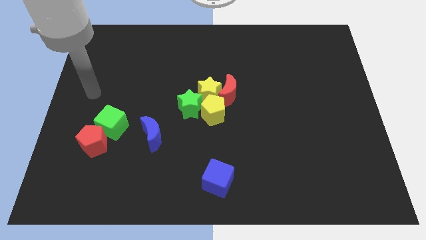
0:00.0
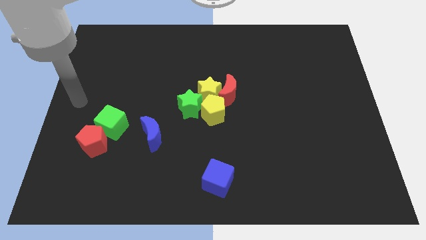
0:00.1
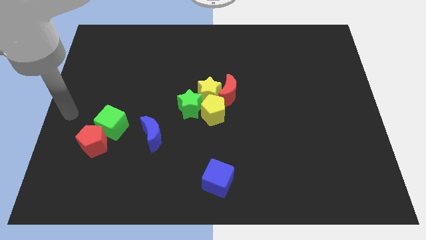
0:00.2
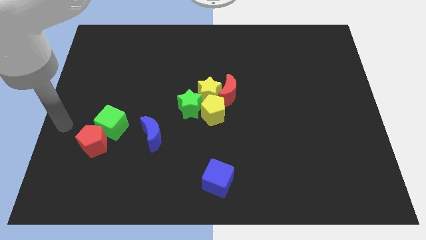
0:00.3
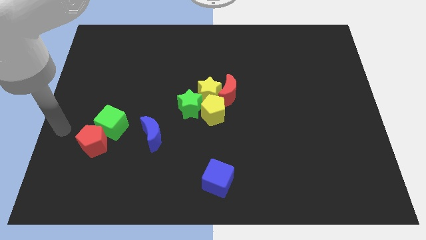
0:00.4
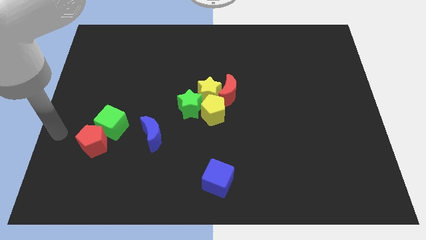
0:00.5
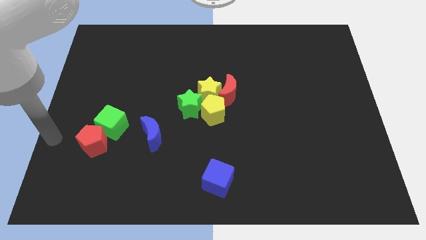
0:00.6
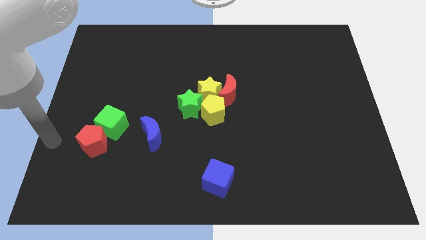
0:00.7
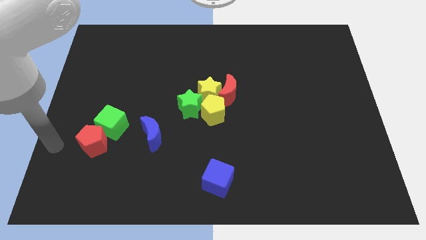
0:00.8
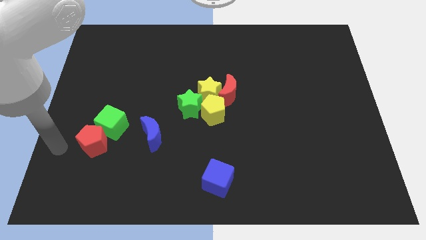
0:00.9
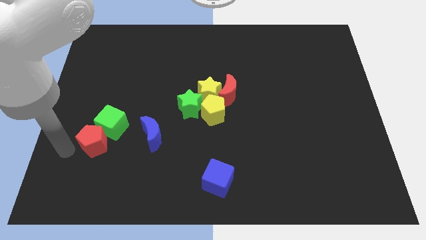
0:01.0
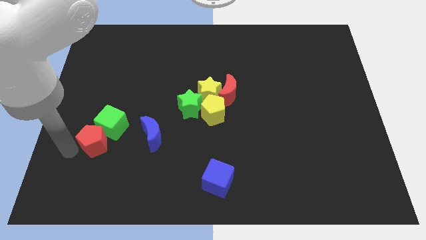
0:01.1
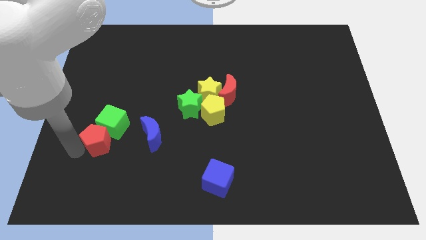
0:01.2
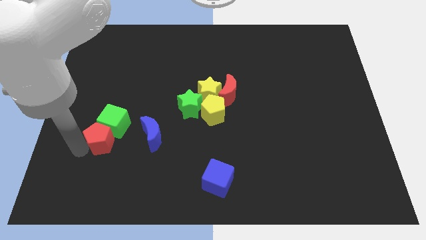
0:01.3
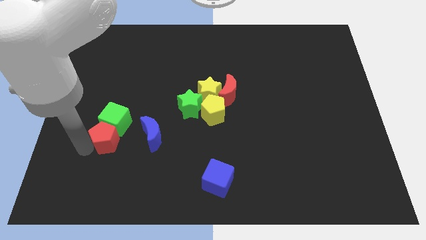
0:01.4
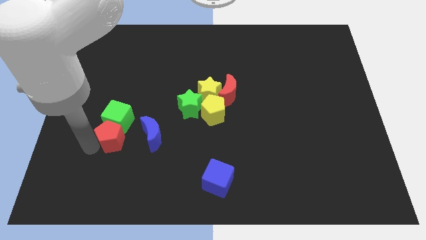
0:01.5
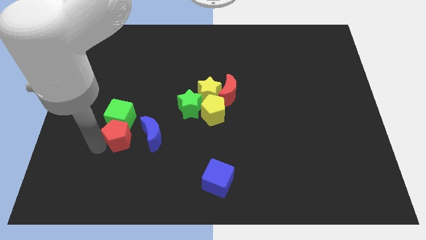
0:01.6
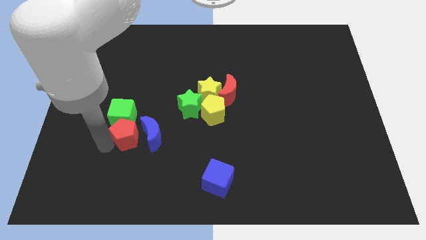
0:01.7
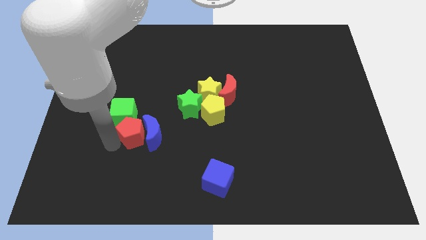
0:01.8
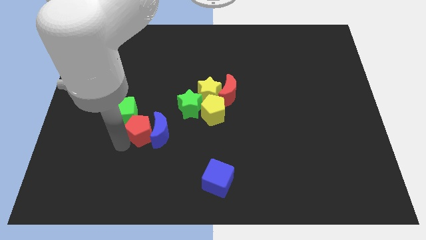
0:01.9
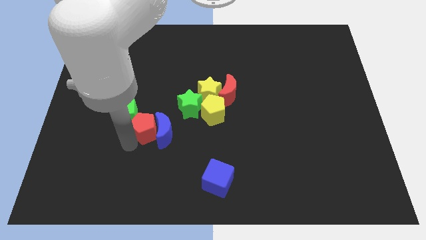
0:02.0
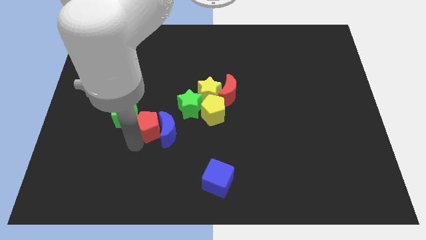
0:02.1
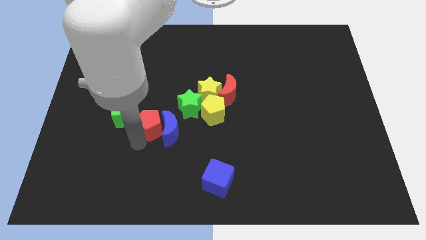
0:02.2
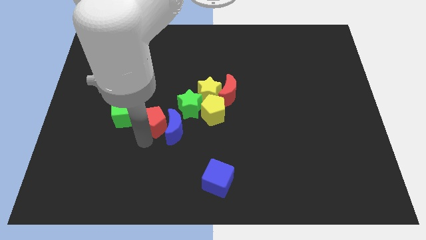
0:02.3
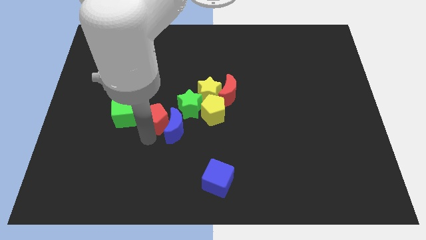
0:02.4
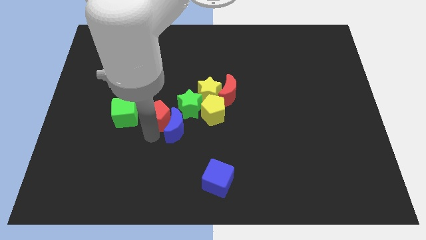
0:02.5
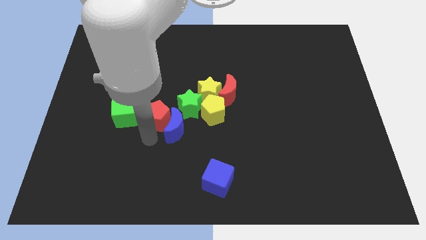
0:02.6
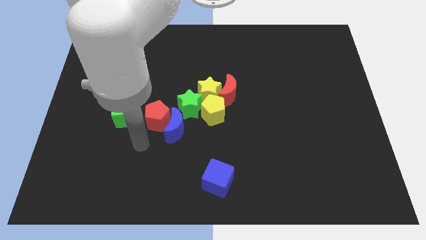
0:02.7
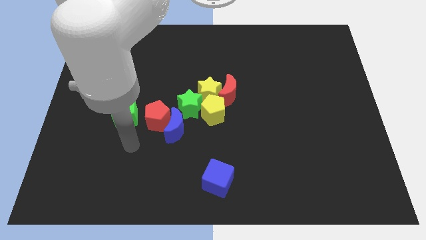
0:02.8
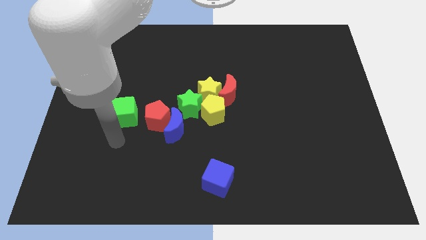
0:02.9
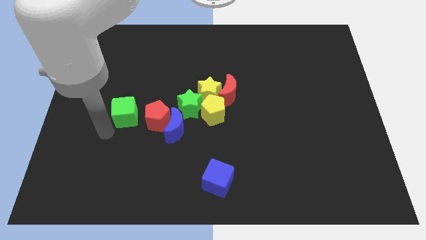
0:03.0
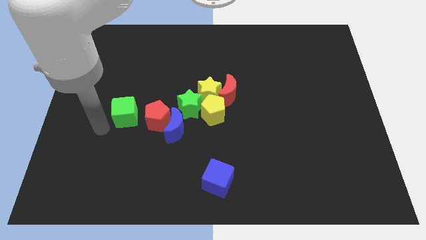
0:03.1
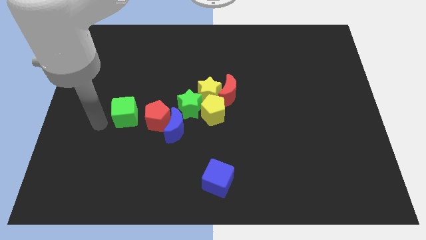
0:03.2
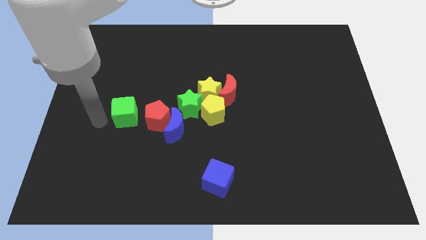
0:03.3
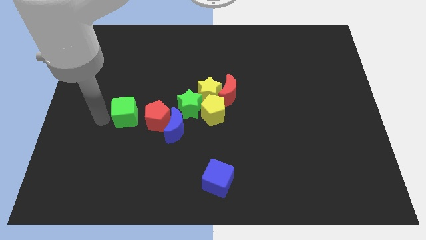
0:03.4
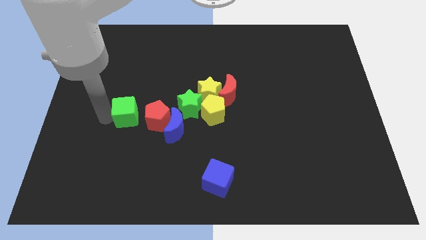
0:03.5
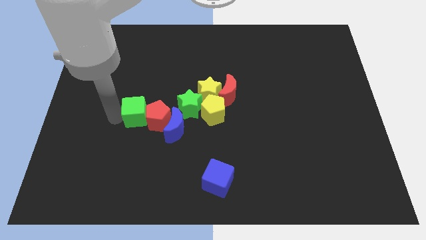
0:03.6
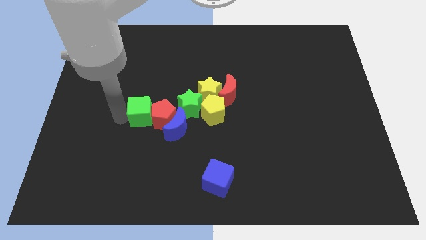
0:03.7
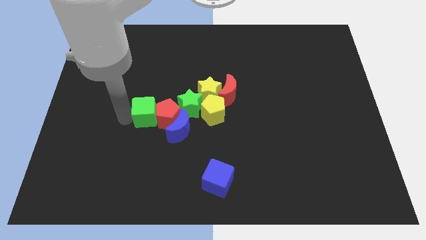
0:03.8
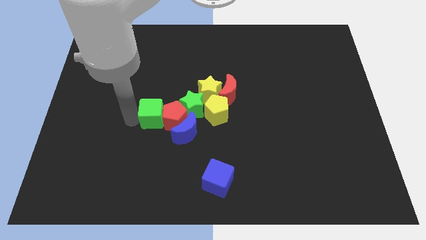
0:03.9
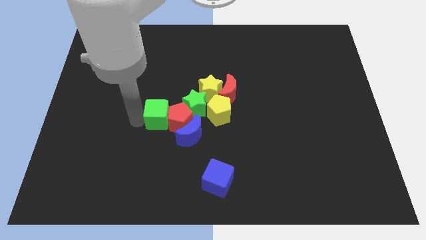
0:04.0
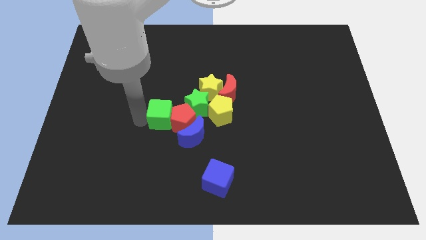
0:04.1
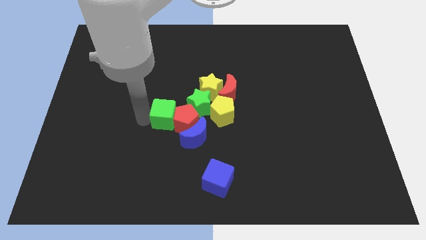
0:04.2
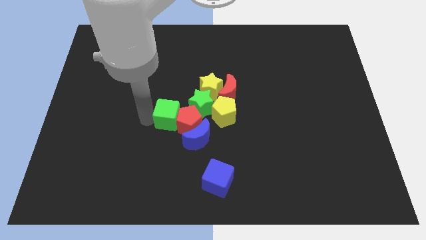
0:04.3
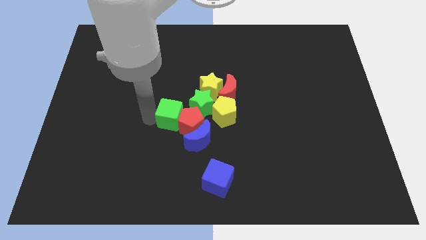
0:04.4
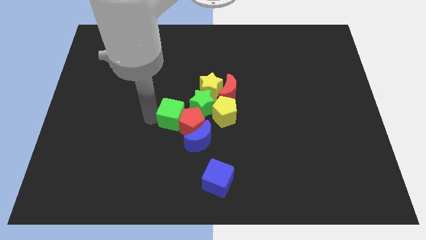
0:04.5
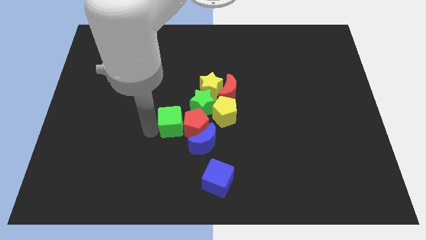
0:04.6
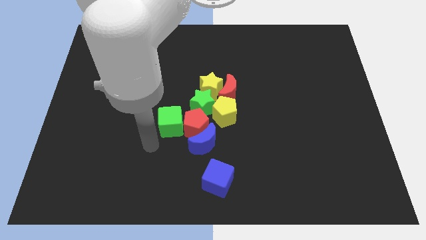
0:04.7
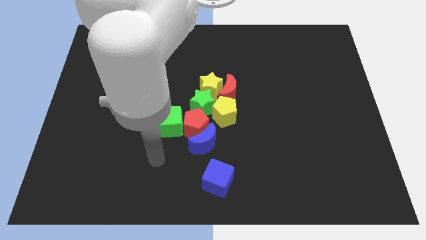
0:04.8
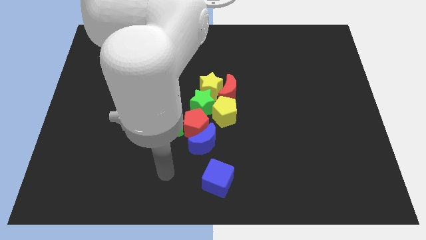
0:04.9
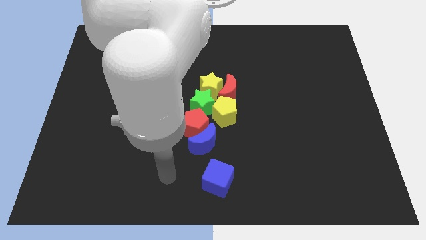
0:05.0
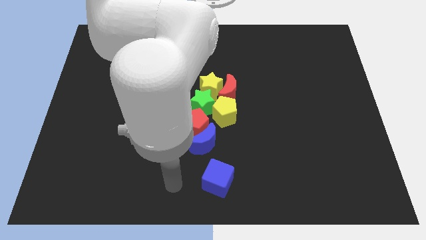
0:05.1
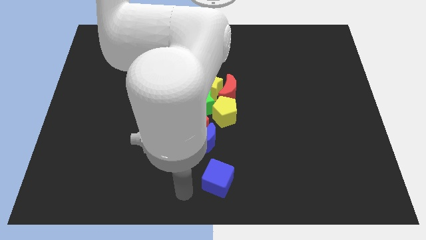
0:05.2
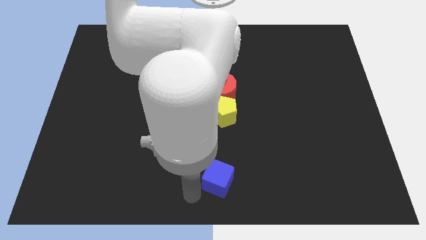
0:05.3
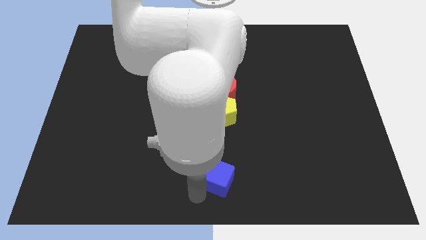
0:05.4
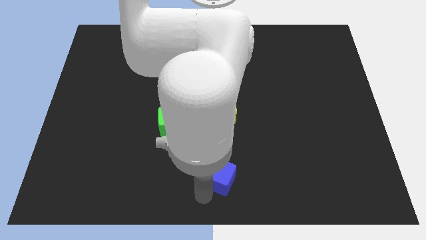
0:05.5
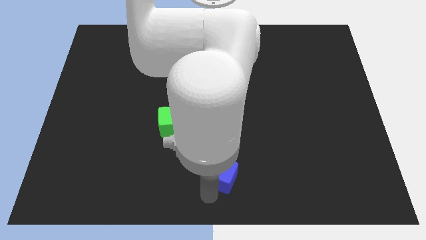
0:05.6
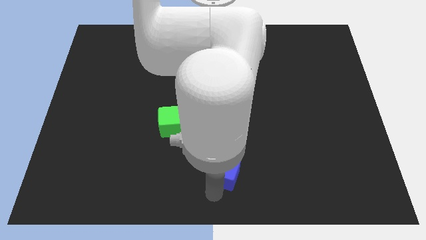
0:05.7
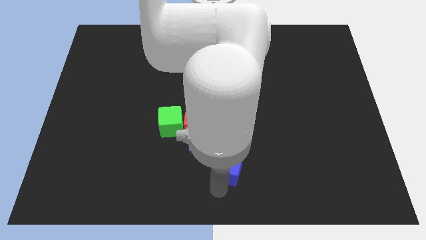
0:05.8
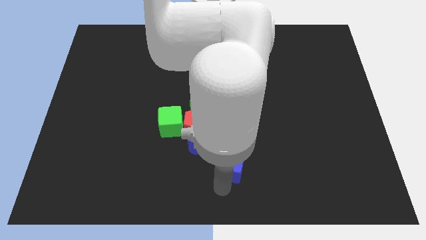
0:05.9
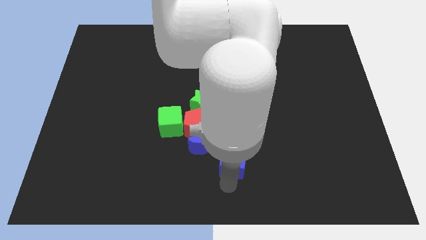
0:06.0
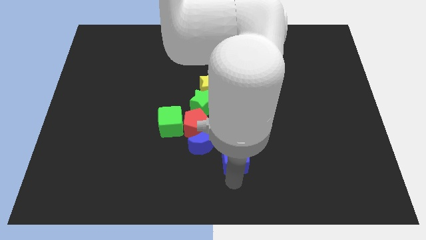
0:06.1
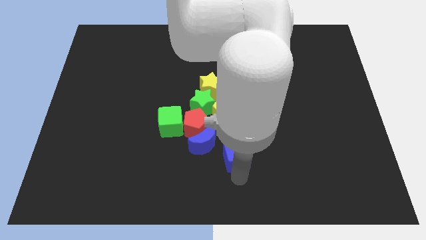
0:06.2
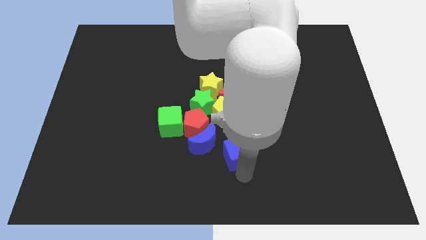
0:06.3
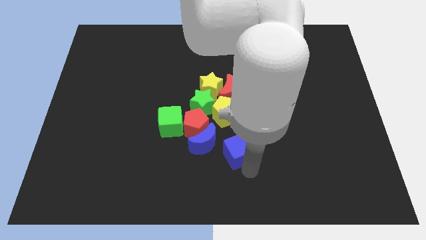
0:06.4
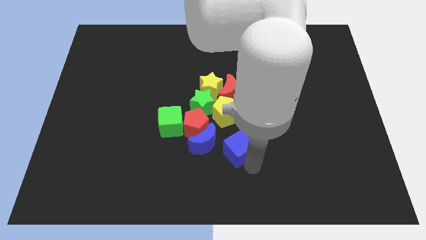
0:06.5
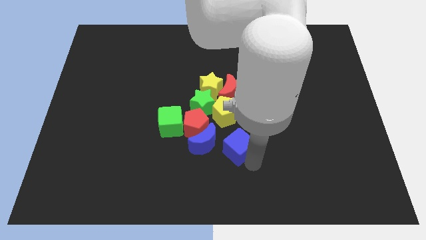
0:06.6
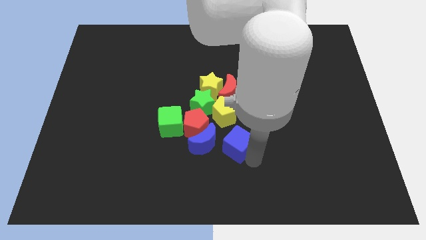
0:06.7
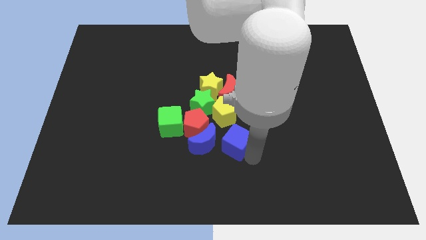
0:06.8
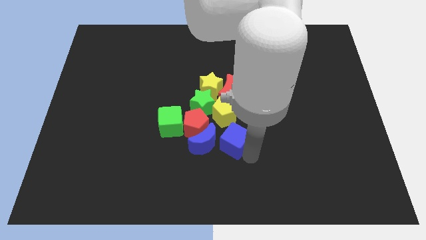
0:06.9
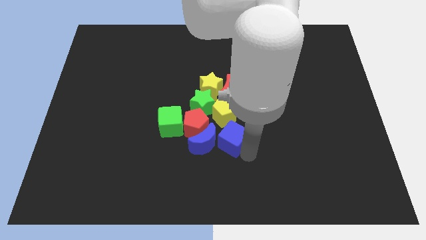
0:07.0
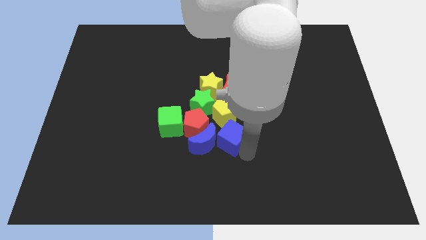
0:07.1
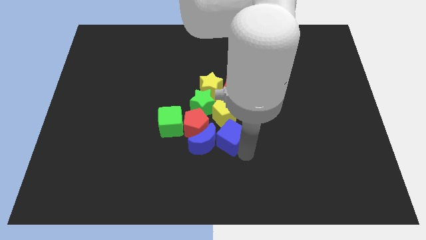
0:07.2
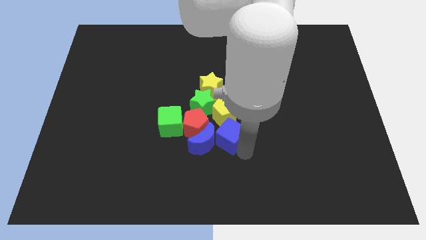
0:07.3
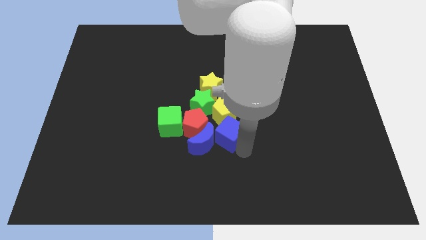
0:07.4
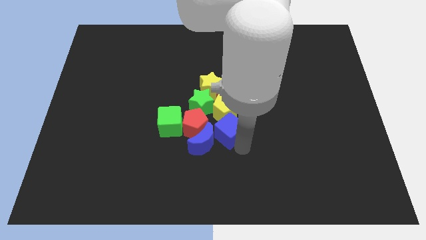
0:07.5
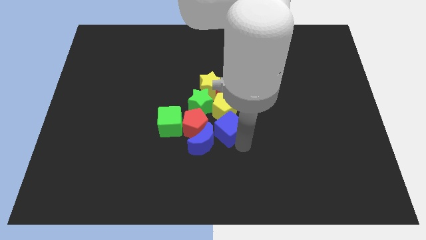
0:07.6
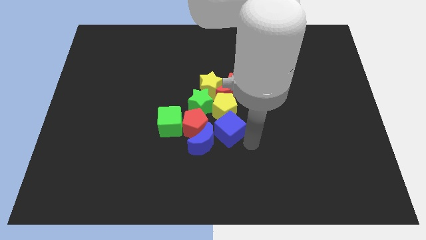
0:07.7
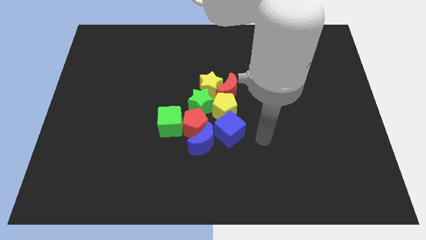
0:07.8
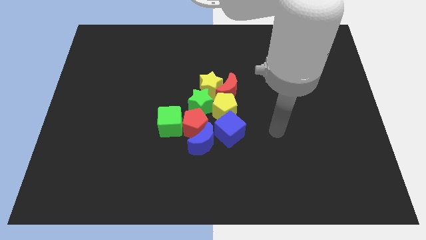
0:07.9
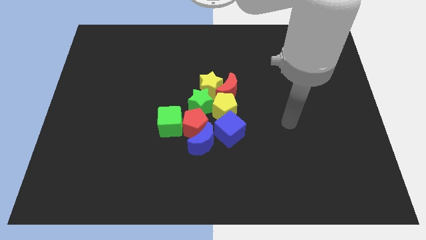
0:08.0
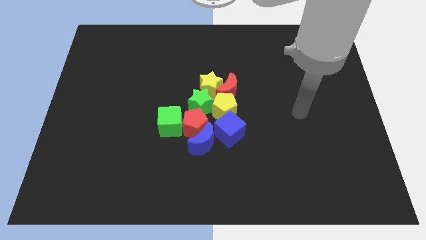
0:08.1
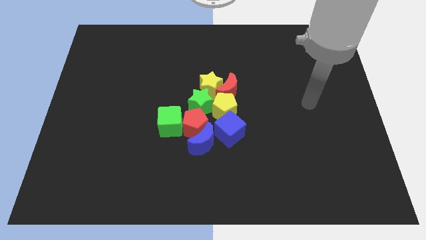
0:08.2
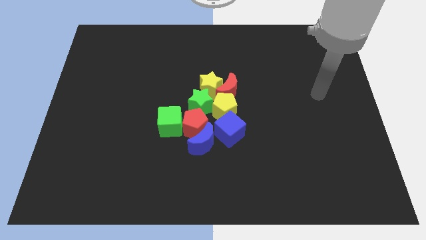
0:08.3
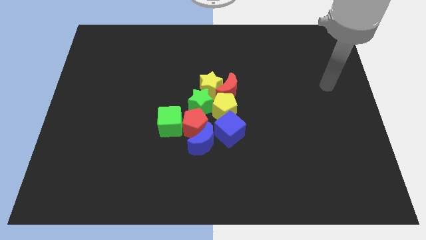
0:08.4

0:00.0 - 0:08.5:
group up all the blocks at the center of the table

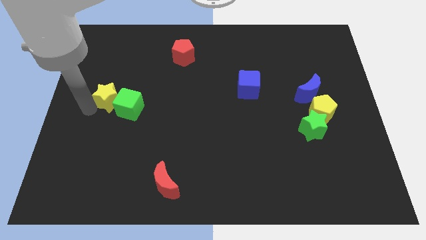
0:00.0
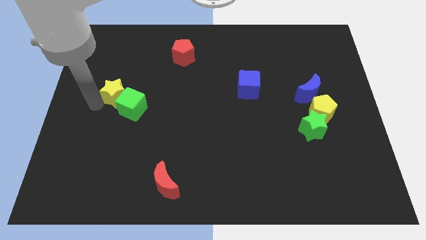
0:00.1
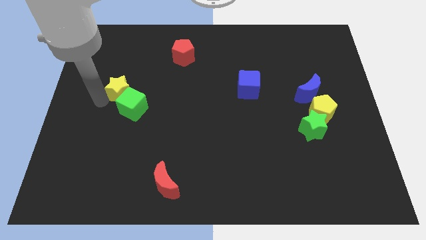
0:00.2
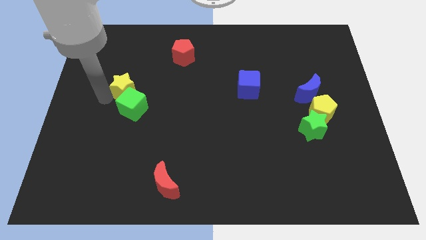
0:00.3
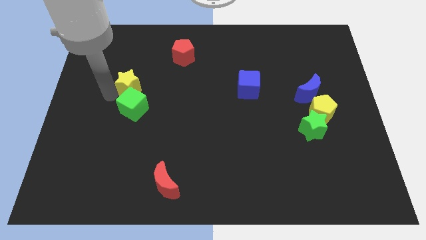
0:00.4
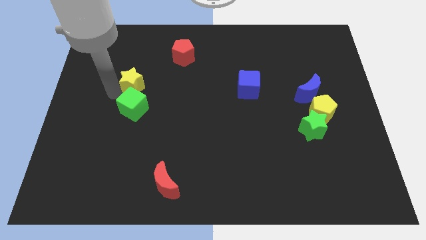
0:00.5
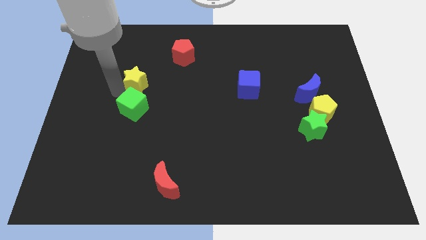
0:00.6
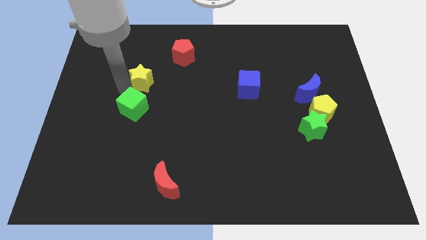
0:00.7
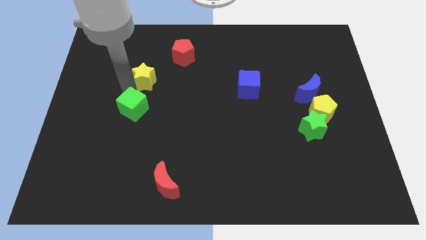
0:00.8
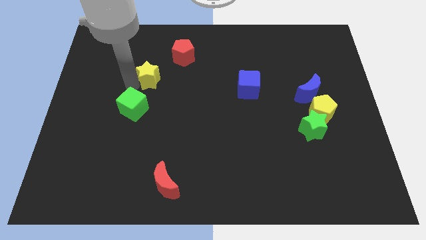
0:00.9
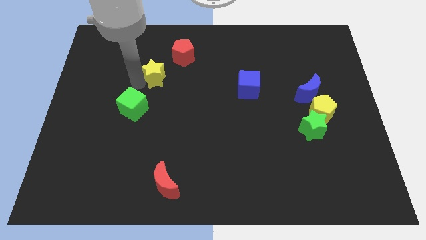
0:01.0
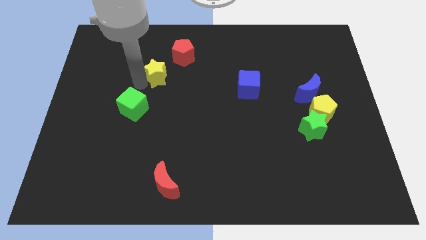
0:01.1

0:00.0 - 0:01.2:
separate yellow star from the green cube
